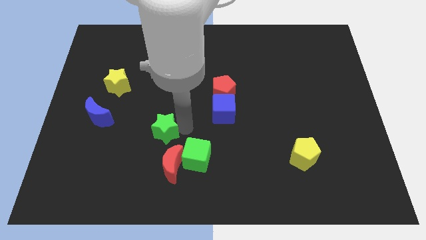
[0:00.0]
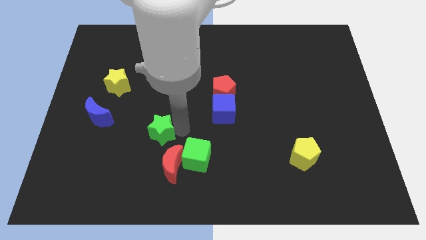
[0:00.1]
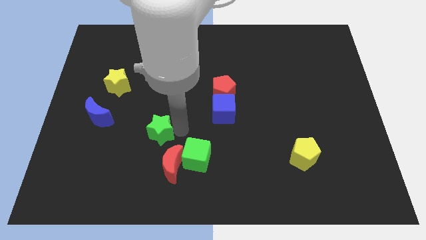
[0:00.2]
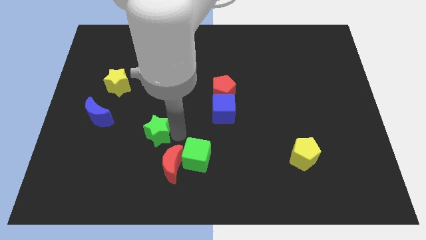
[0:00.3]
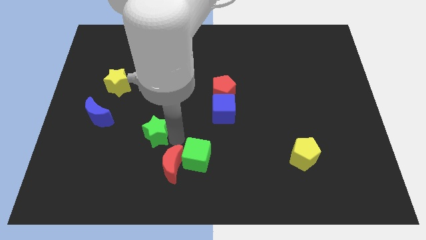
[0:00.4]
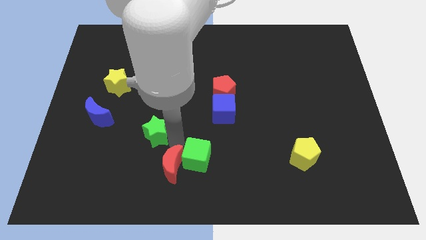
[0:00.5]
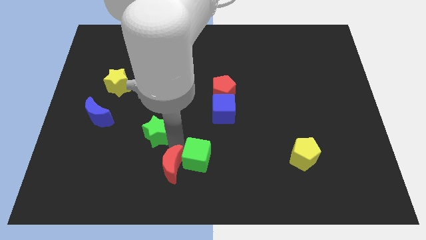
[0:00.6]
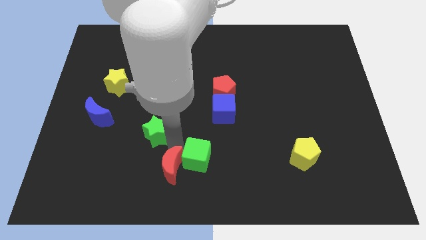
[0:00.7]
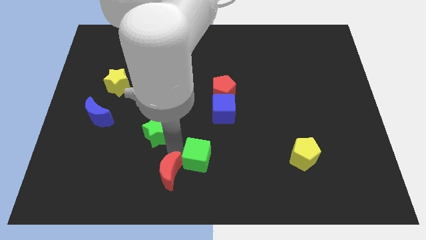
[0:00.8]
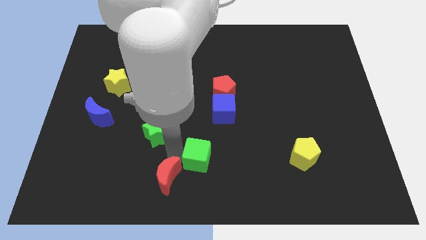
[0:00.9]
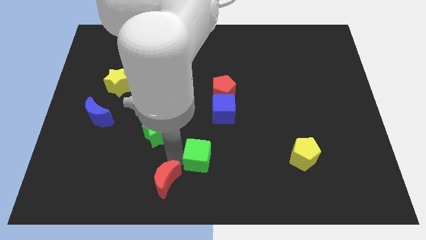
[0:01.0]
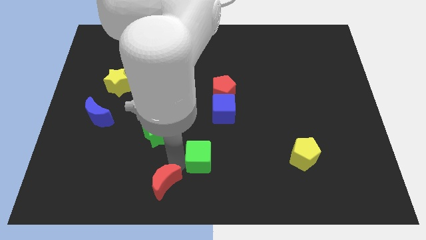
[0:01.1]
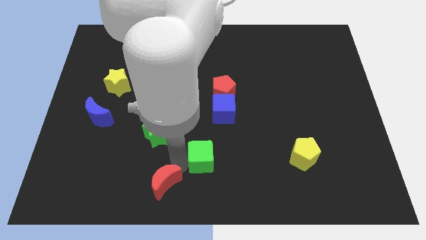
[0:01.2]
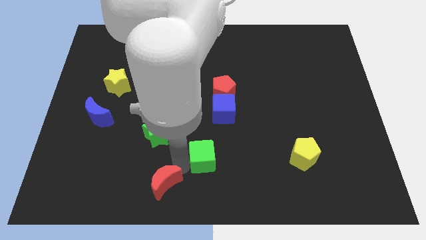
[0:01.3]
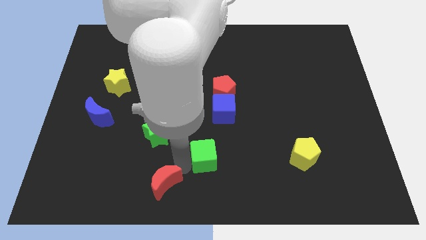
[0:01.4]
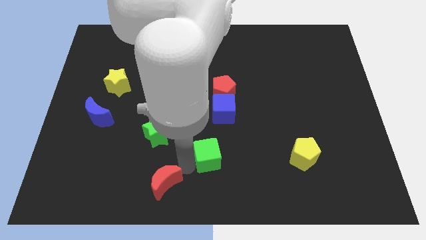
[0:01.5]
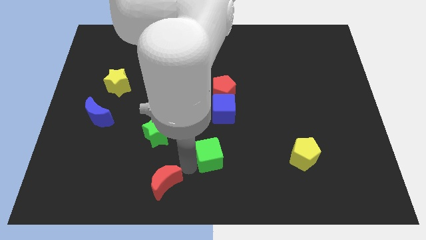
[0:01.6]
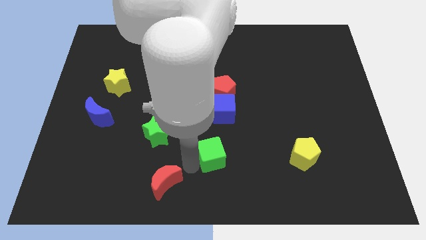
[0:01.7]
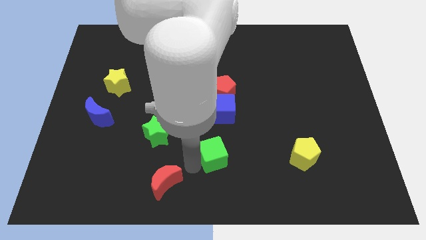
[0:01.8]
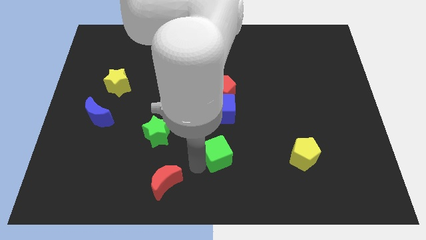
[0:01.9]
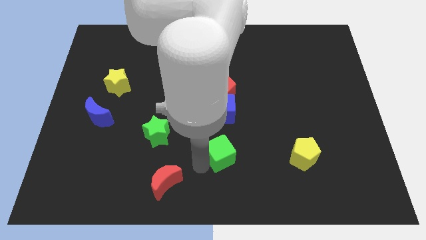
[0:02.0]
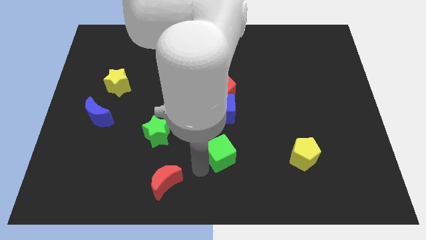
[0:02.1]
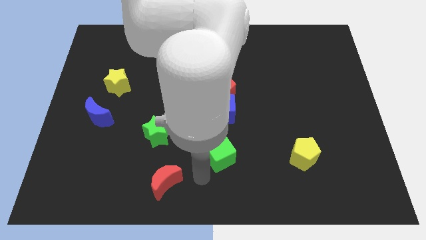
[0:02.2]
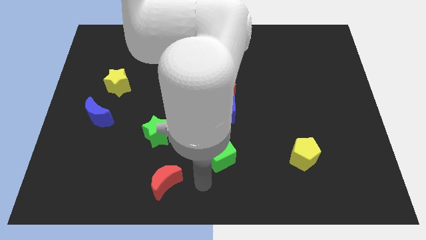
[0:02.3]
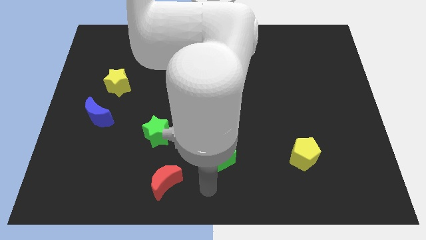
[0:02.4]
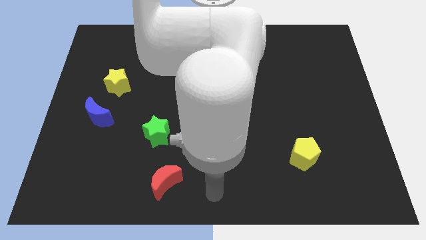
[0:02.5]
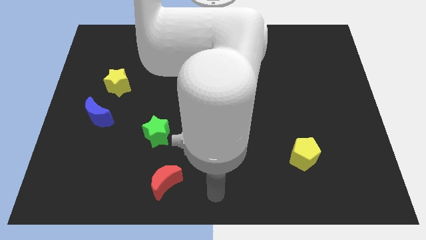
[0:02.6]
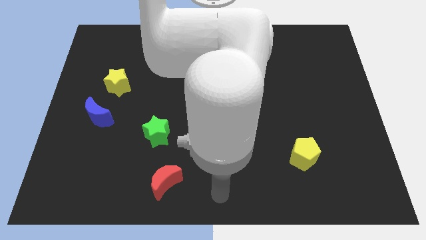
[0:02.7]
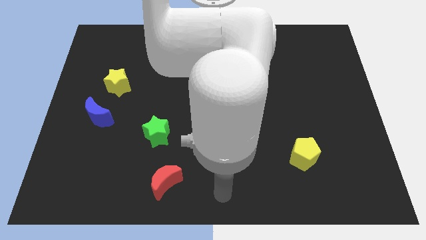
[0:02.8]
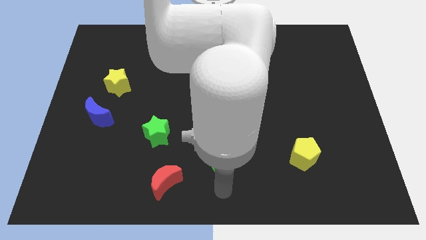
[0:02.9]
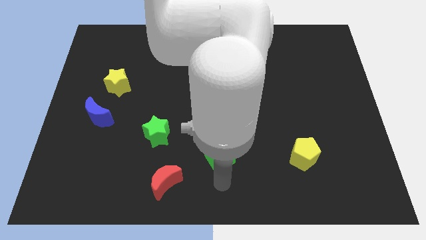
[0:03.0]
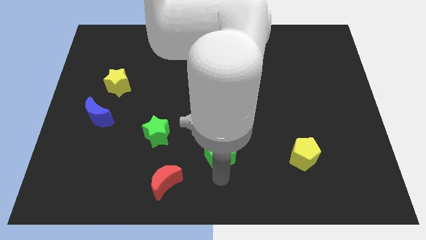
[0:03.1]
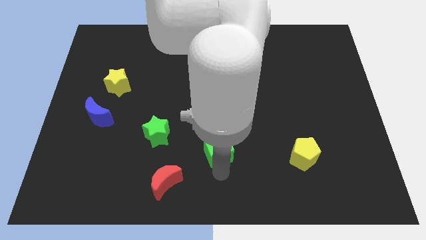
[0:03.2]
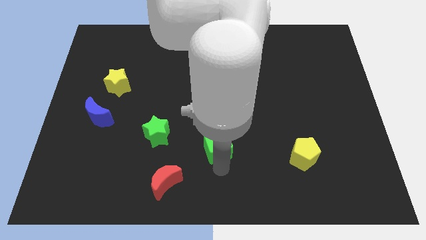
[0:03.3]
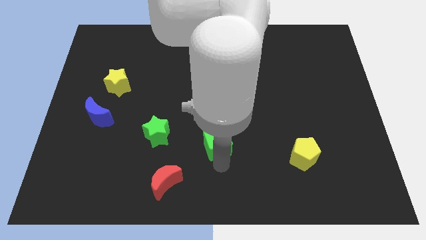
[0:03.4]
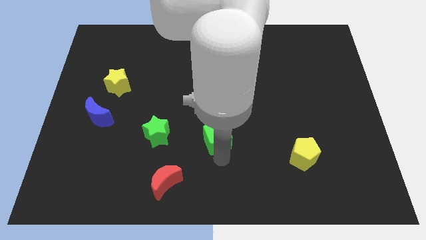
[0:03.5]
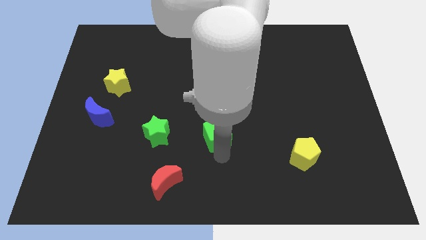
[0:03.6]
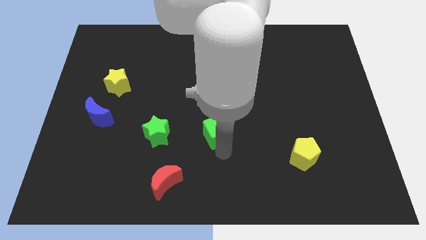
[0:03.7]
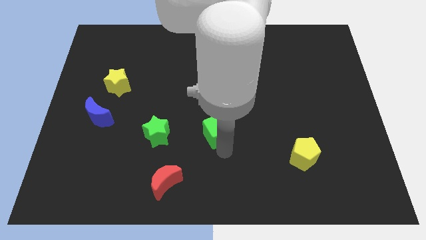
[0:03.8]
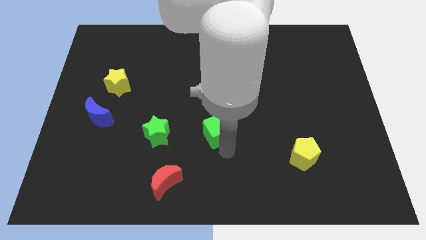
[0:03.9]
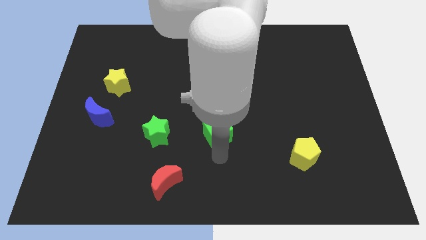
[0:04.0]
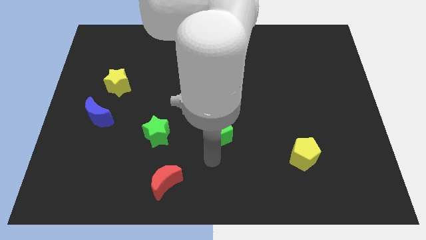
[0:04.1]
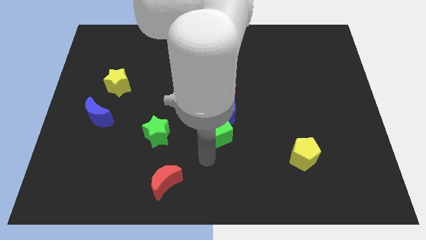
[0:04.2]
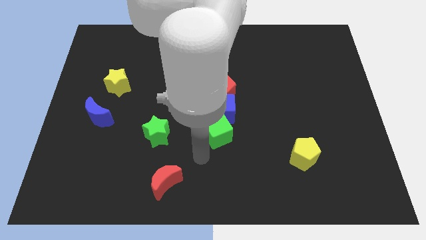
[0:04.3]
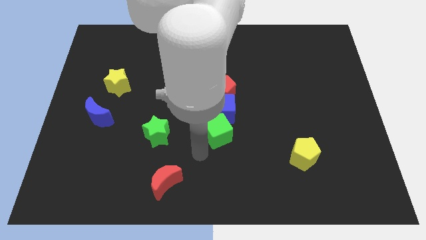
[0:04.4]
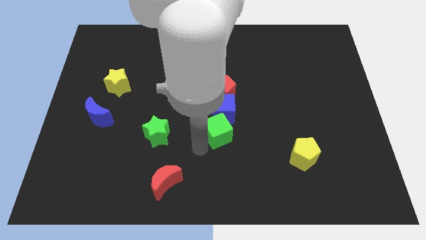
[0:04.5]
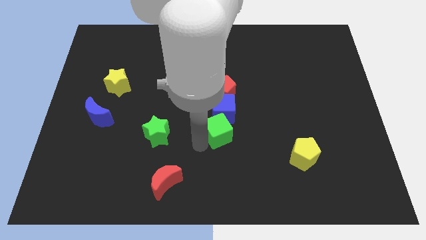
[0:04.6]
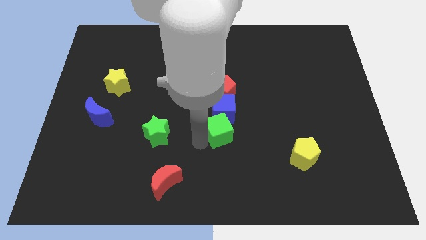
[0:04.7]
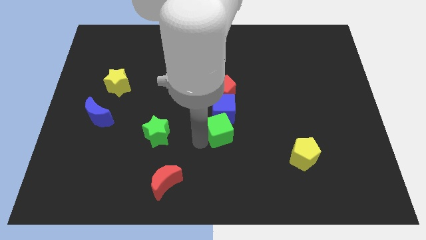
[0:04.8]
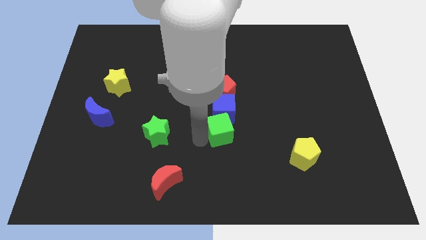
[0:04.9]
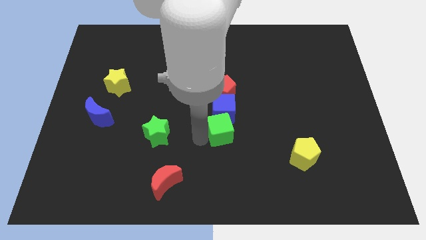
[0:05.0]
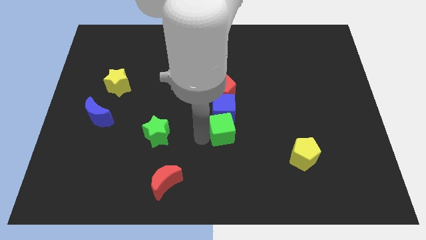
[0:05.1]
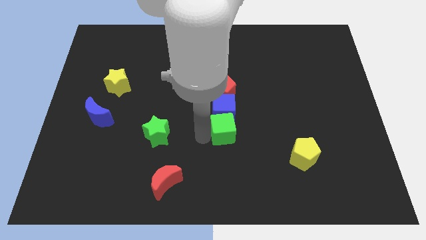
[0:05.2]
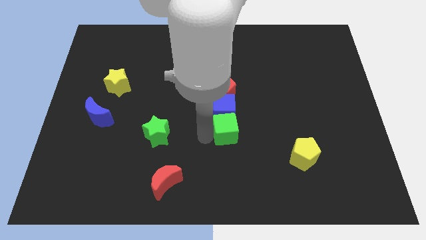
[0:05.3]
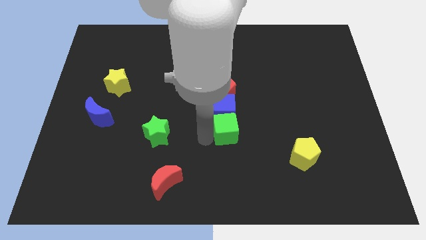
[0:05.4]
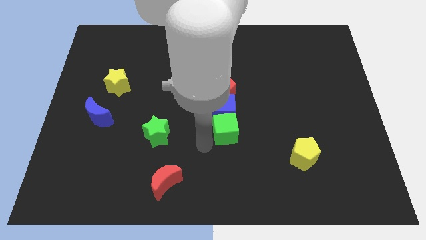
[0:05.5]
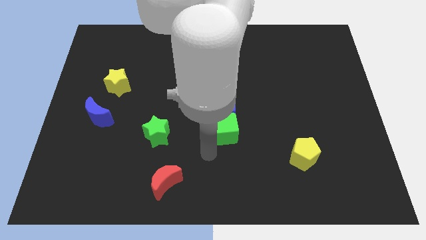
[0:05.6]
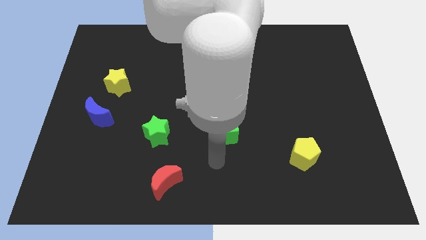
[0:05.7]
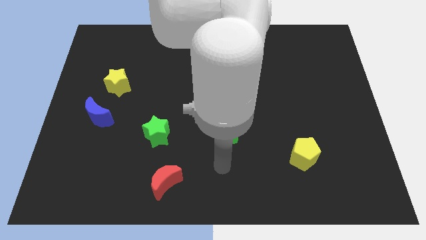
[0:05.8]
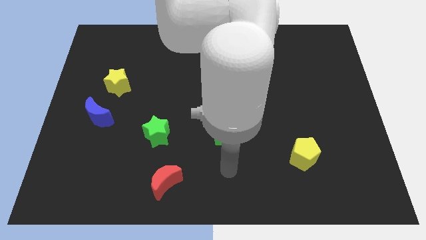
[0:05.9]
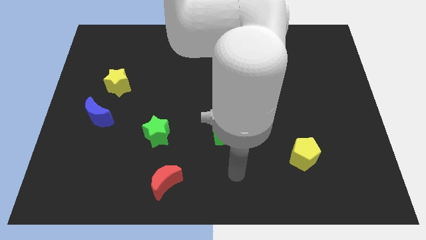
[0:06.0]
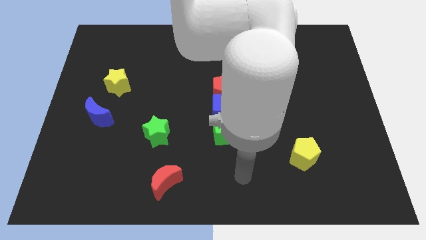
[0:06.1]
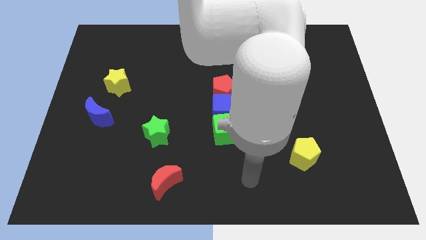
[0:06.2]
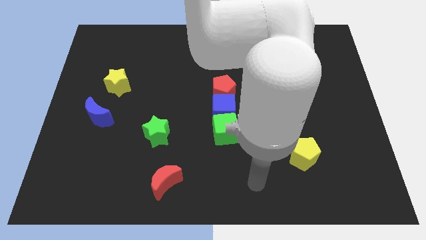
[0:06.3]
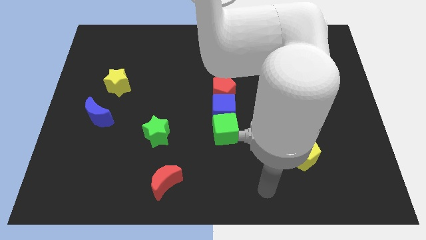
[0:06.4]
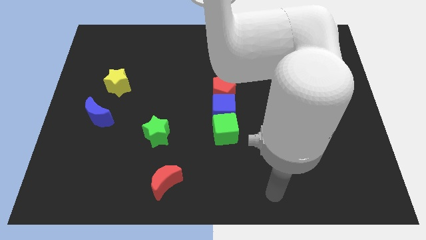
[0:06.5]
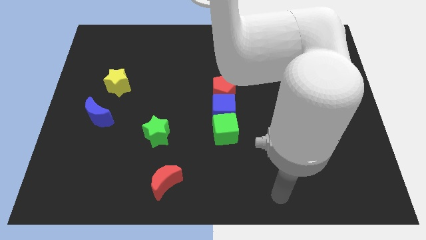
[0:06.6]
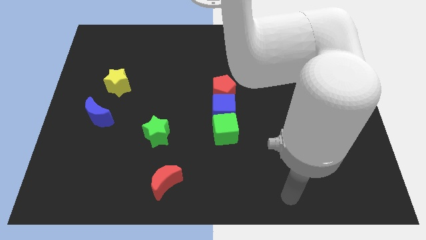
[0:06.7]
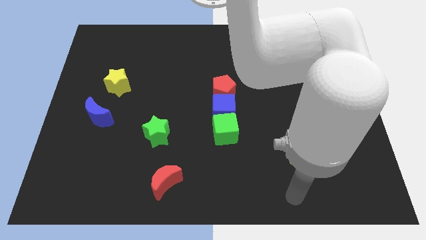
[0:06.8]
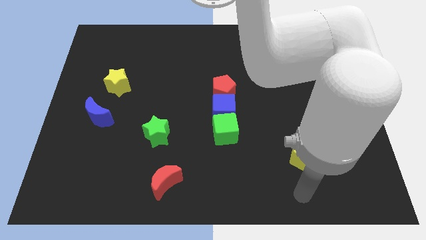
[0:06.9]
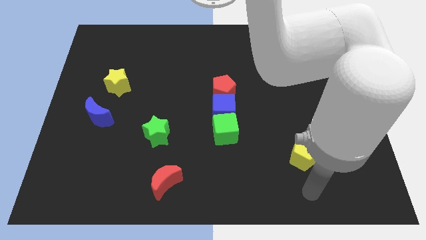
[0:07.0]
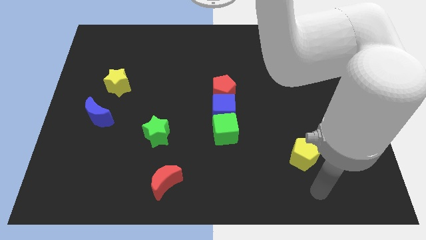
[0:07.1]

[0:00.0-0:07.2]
separate the green cube from the red moon

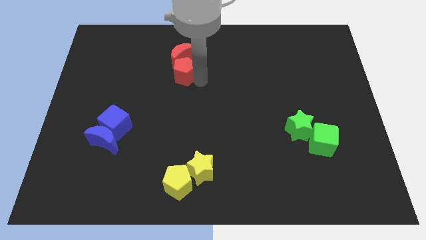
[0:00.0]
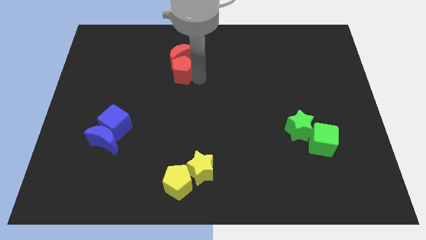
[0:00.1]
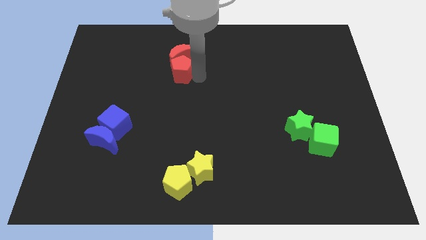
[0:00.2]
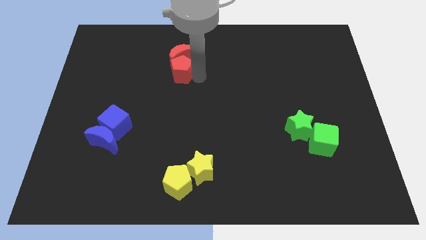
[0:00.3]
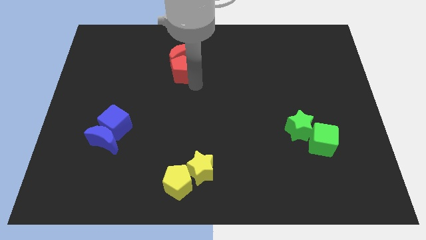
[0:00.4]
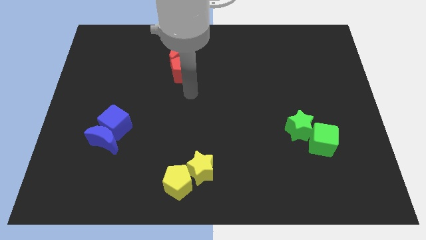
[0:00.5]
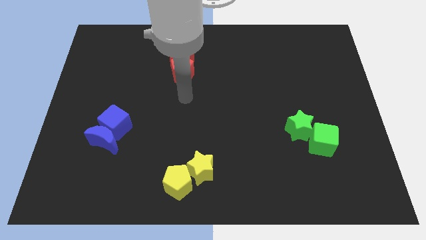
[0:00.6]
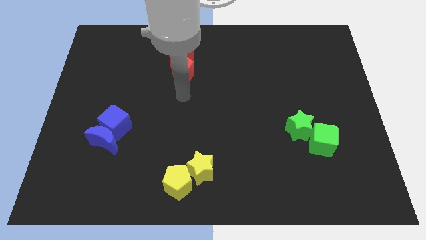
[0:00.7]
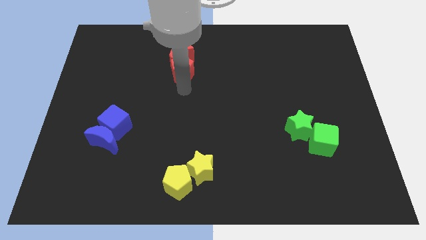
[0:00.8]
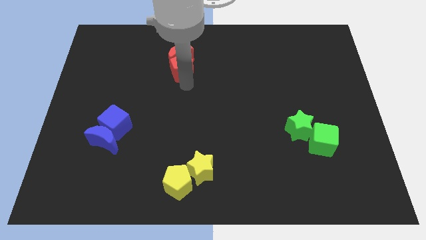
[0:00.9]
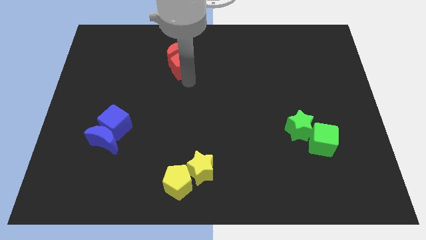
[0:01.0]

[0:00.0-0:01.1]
push the red pentagon with the red moon upwards a bit

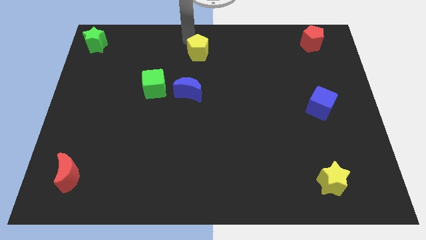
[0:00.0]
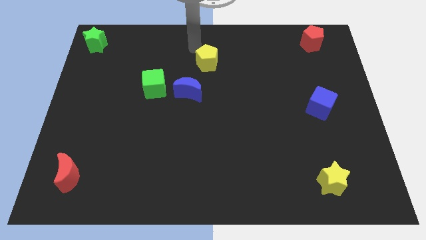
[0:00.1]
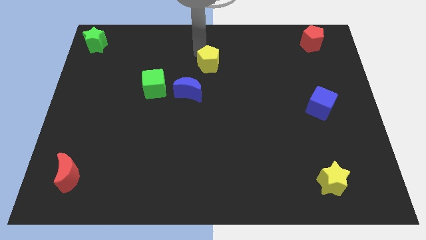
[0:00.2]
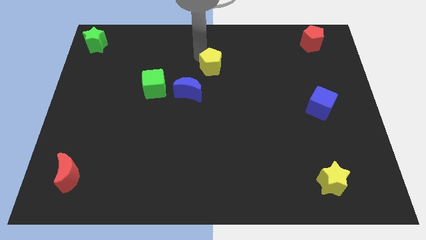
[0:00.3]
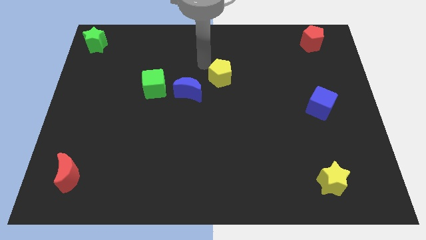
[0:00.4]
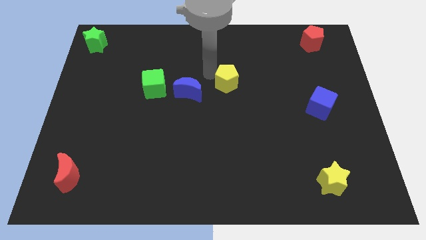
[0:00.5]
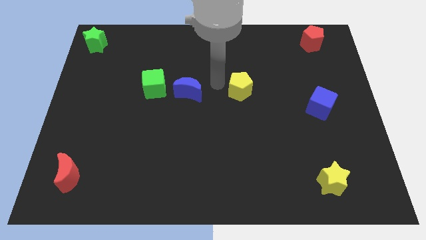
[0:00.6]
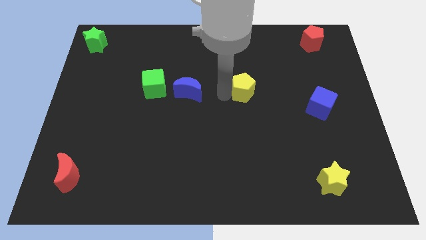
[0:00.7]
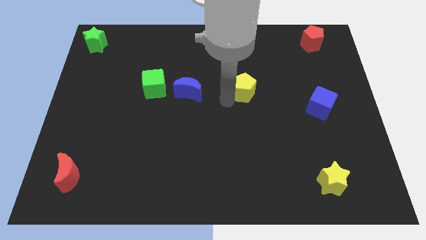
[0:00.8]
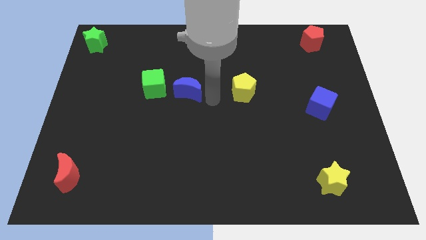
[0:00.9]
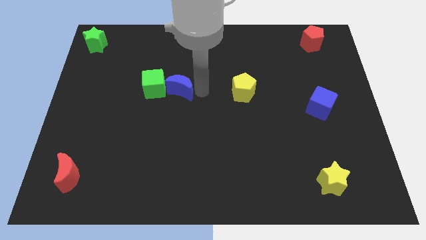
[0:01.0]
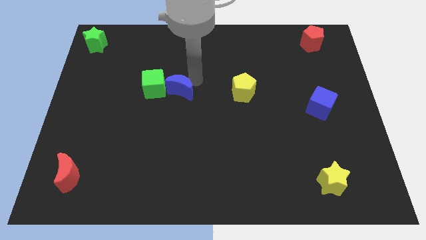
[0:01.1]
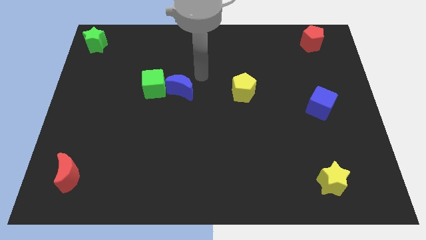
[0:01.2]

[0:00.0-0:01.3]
move the yellow pentagon diagonal to the right of the blue crescent
